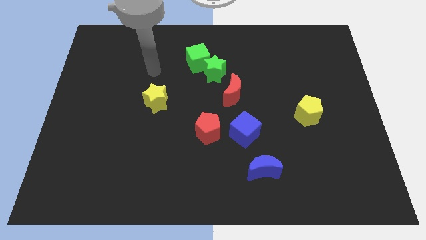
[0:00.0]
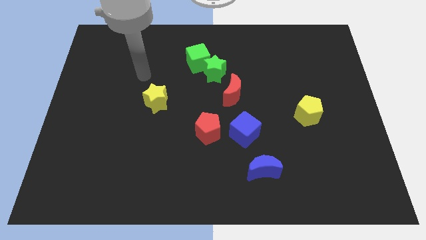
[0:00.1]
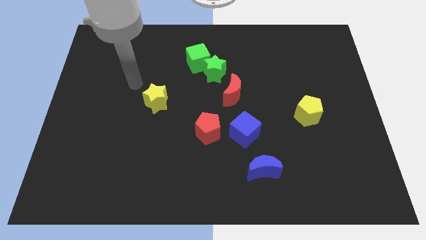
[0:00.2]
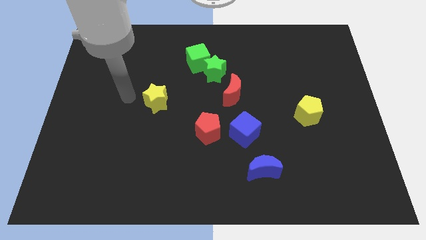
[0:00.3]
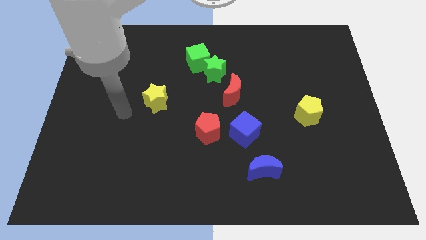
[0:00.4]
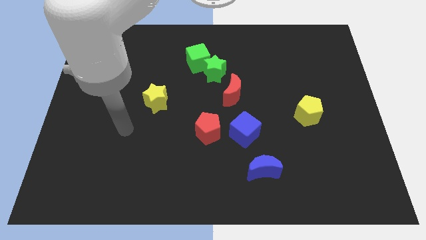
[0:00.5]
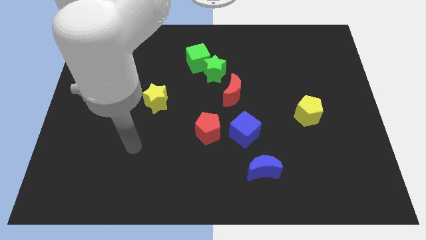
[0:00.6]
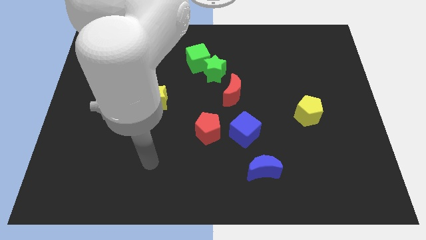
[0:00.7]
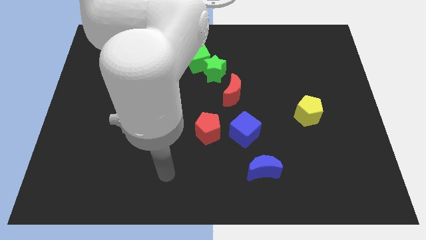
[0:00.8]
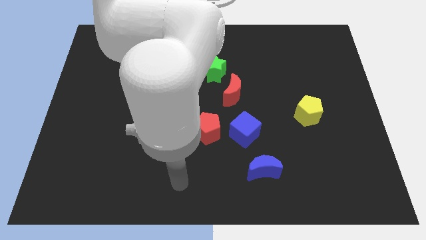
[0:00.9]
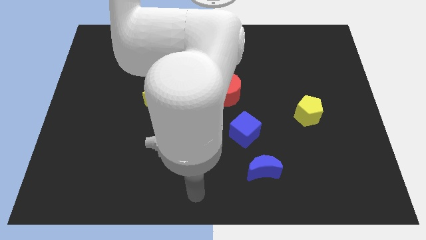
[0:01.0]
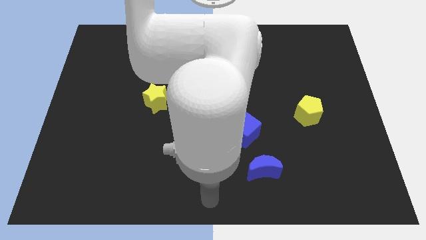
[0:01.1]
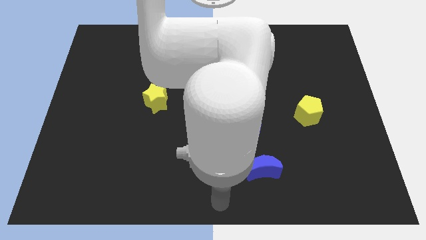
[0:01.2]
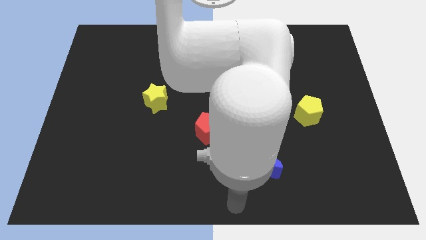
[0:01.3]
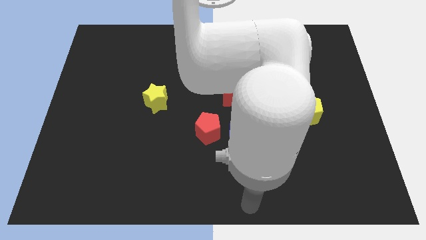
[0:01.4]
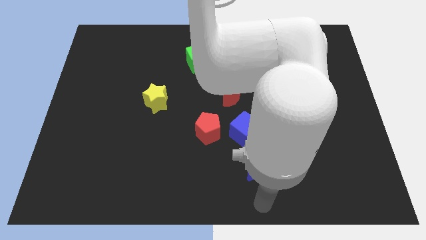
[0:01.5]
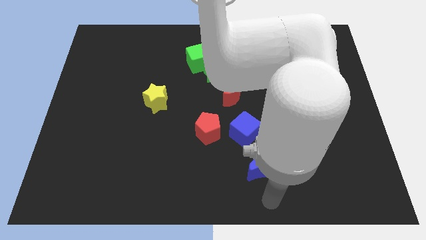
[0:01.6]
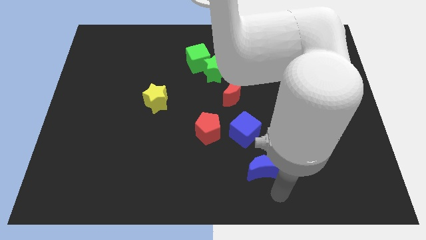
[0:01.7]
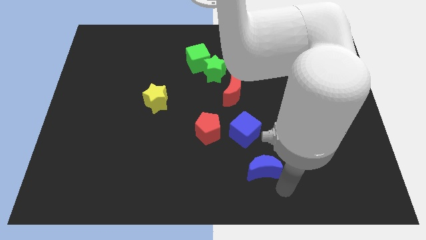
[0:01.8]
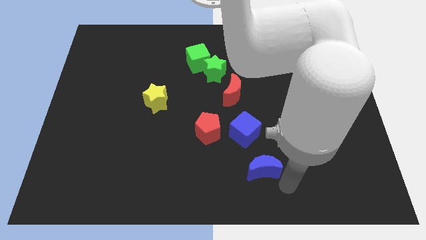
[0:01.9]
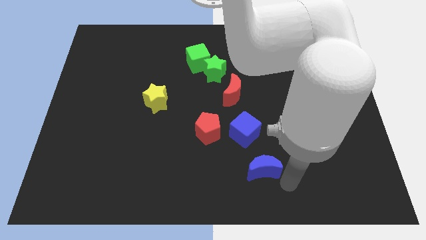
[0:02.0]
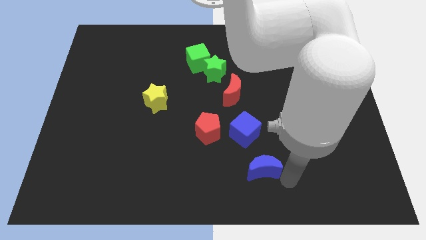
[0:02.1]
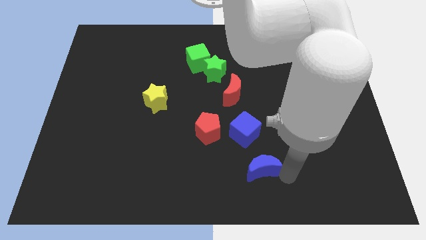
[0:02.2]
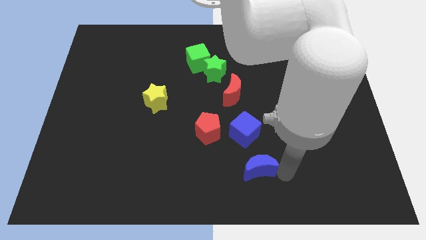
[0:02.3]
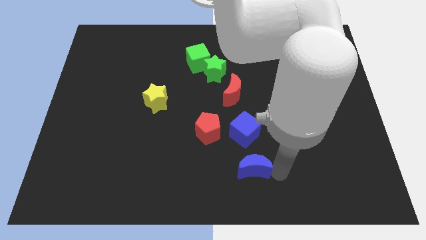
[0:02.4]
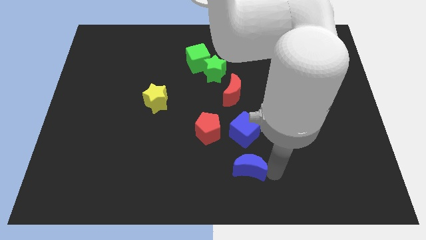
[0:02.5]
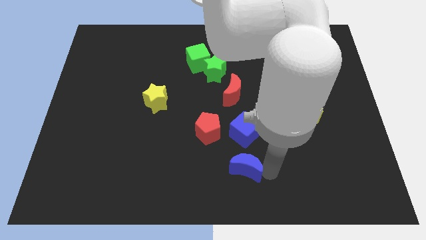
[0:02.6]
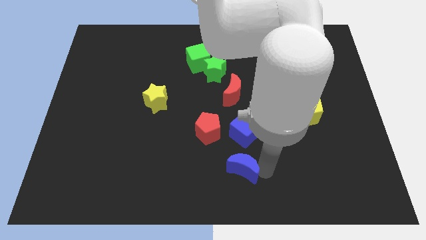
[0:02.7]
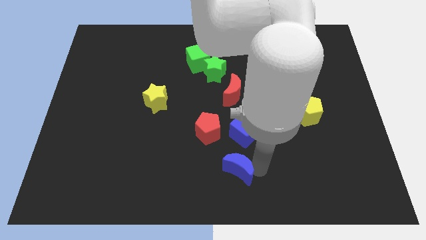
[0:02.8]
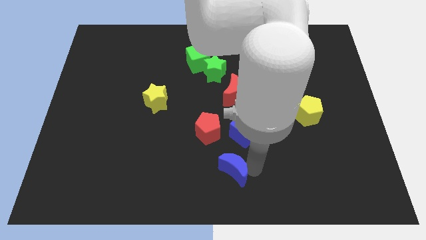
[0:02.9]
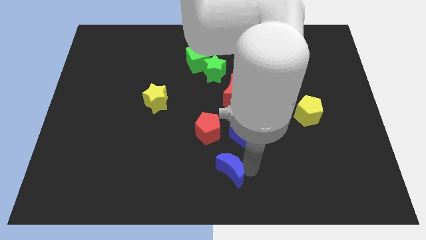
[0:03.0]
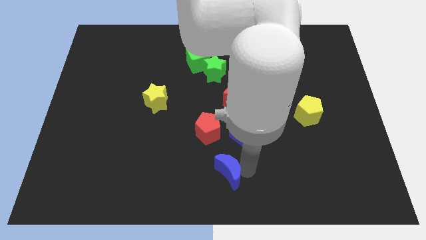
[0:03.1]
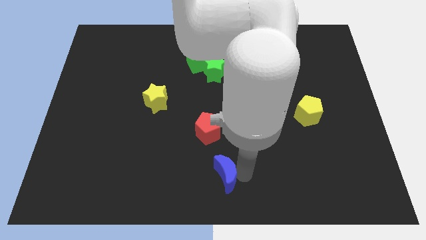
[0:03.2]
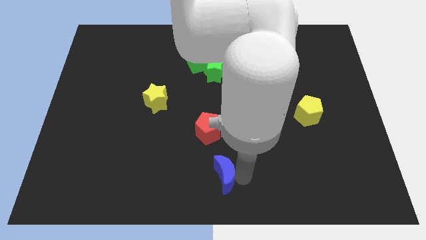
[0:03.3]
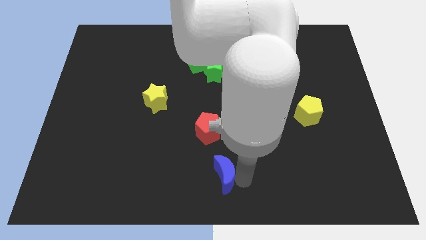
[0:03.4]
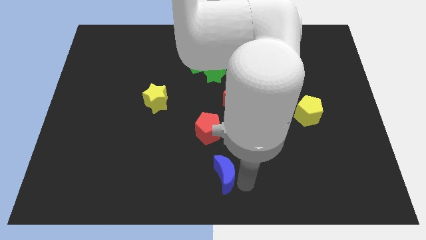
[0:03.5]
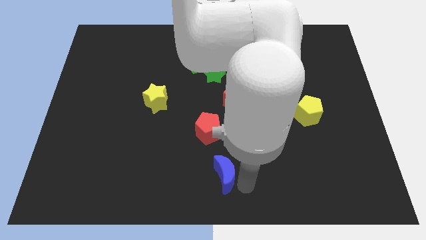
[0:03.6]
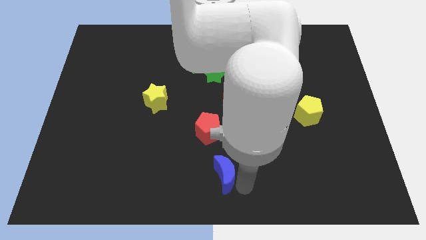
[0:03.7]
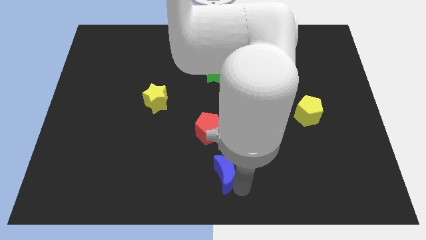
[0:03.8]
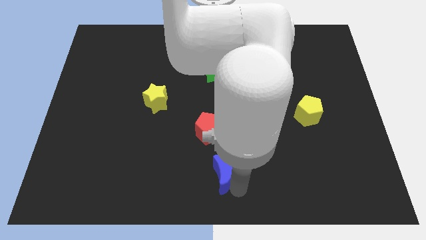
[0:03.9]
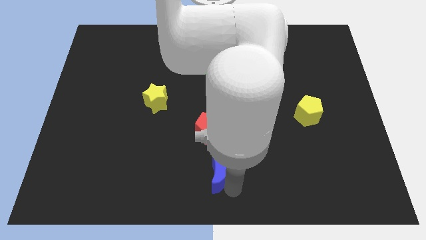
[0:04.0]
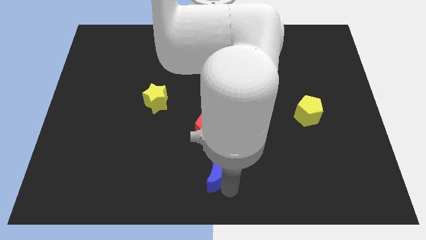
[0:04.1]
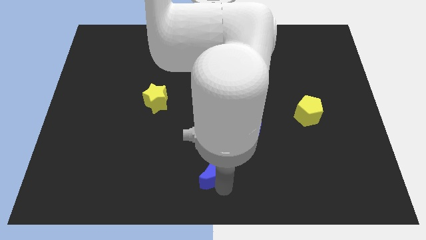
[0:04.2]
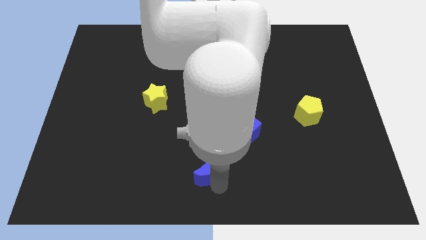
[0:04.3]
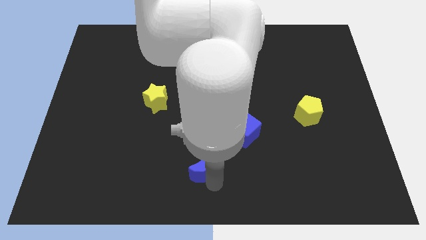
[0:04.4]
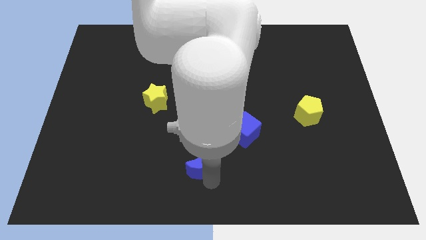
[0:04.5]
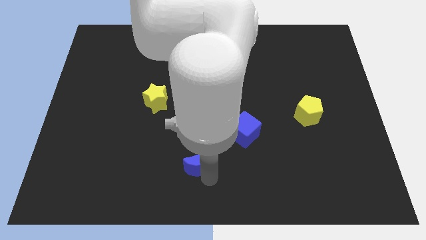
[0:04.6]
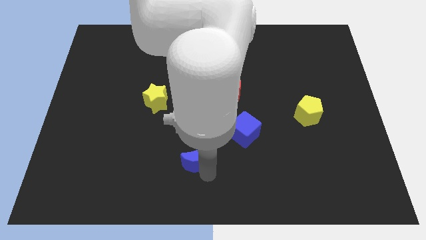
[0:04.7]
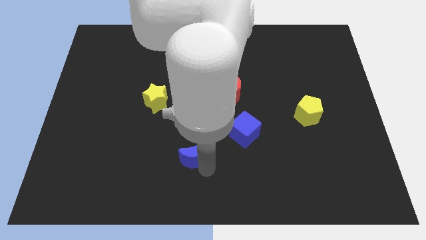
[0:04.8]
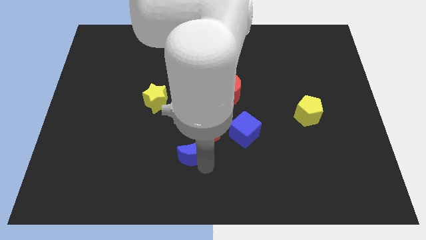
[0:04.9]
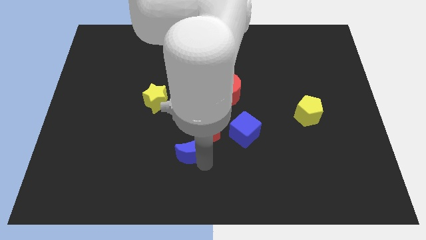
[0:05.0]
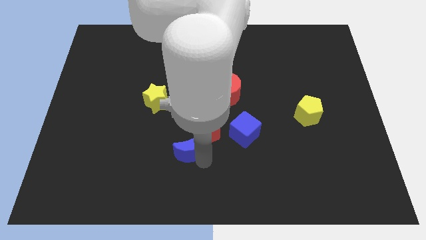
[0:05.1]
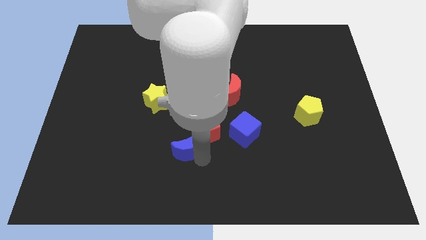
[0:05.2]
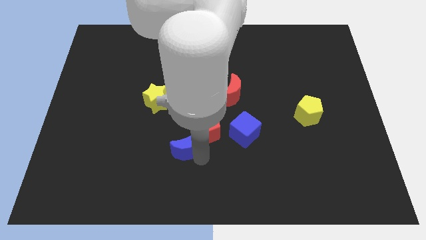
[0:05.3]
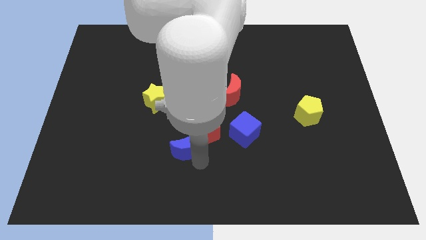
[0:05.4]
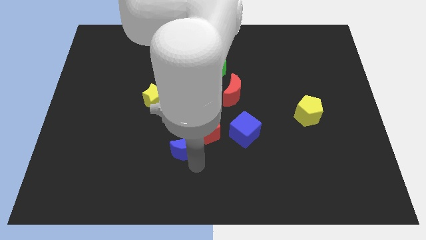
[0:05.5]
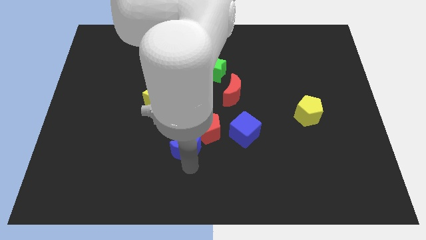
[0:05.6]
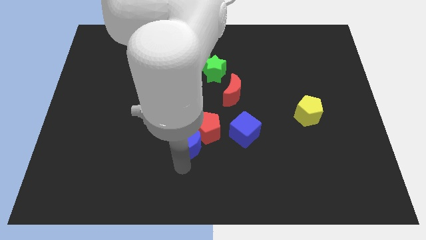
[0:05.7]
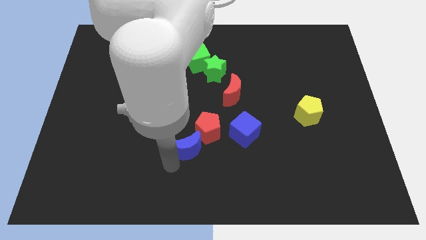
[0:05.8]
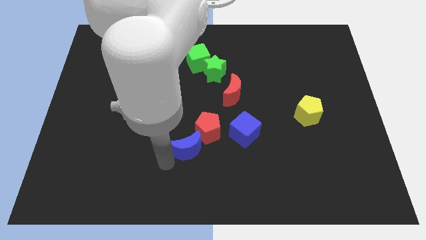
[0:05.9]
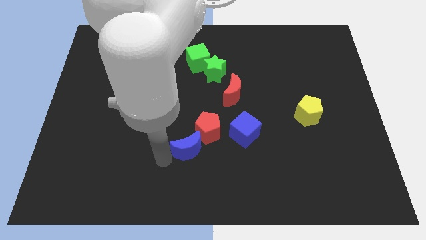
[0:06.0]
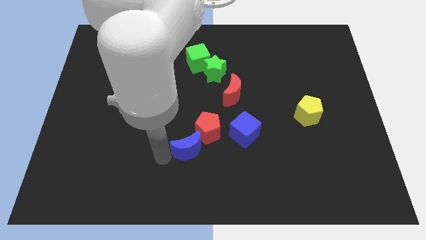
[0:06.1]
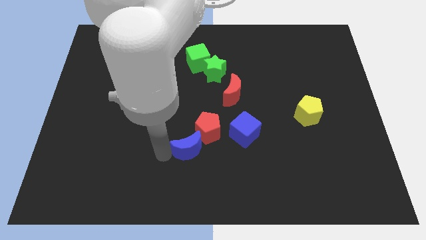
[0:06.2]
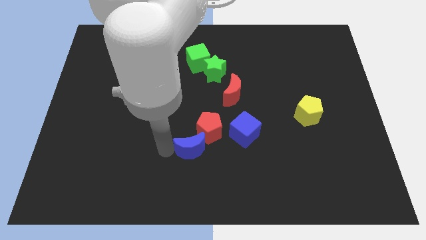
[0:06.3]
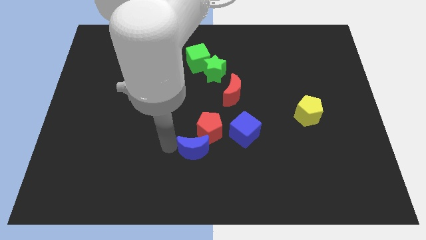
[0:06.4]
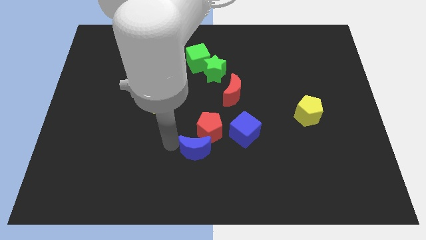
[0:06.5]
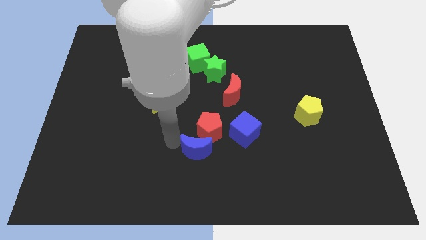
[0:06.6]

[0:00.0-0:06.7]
move the blue moon close to the red pentagon

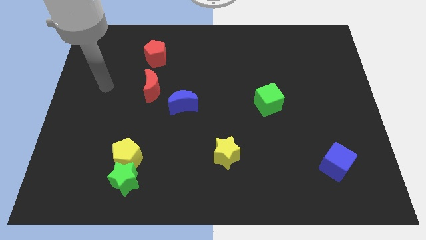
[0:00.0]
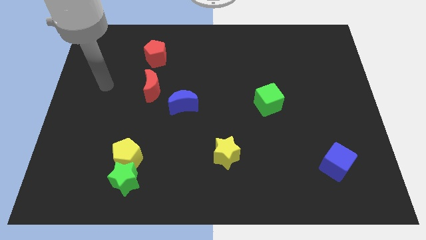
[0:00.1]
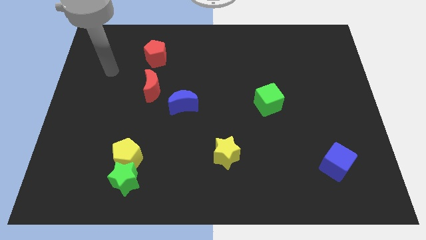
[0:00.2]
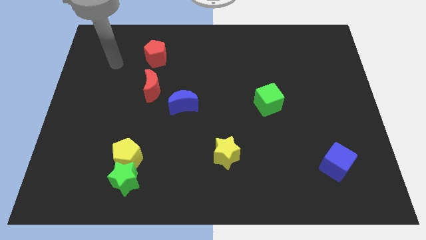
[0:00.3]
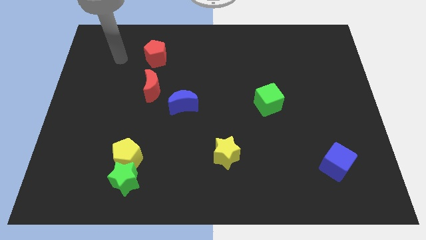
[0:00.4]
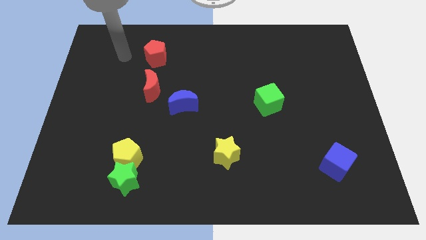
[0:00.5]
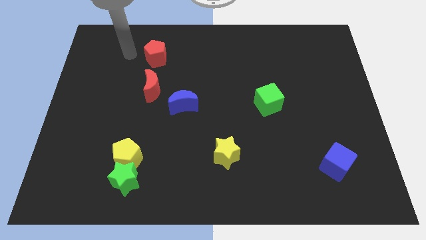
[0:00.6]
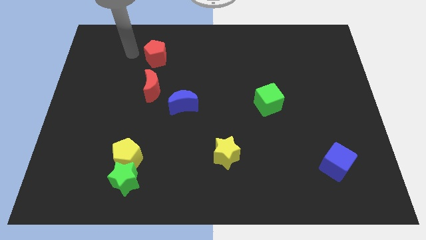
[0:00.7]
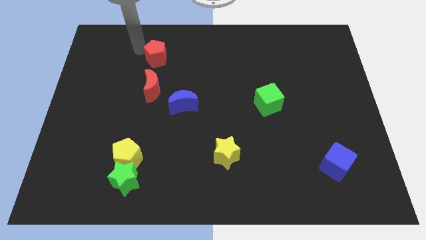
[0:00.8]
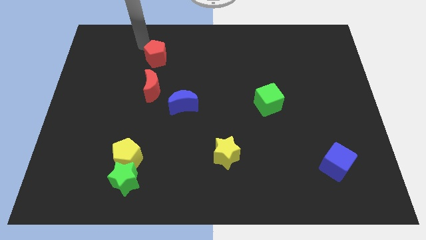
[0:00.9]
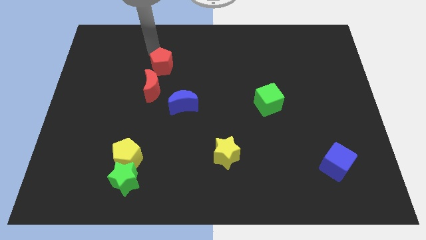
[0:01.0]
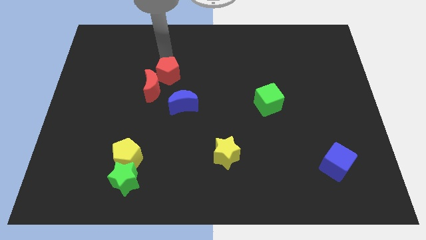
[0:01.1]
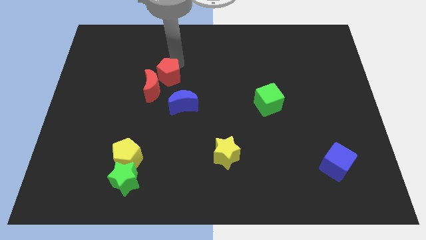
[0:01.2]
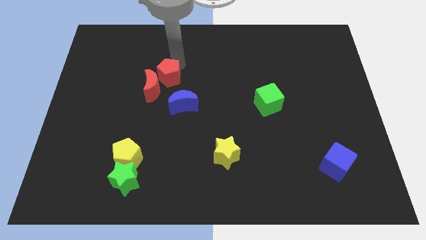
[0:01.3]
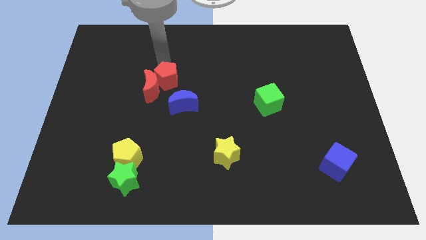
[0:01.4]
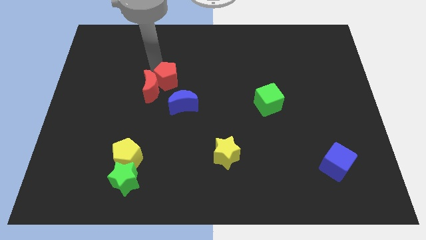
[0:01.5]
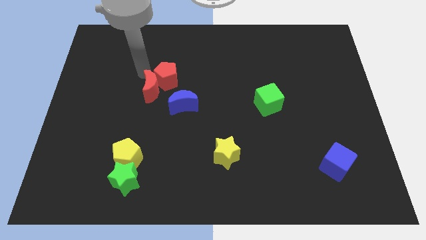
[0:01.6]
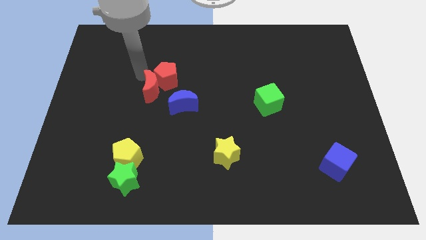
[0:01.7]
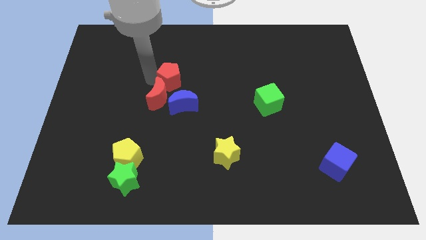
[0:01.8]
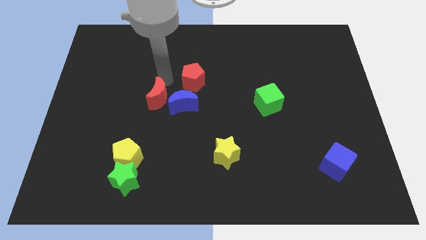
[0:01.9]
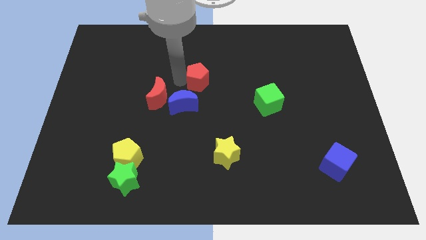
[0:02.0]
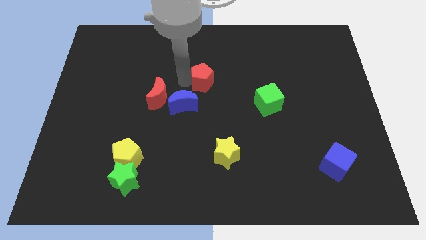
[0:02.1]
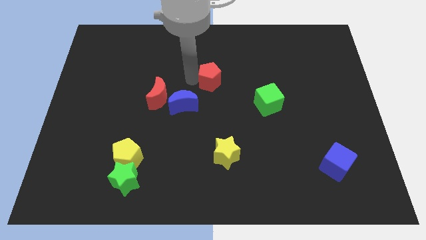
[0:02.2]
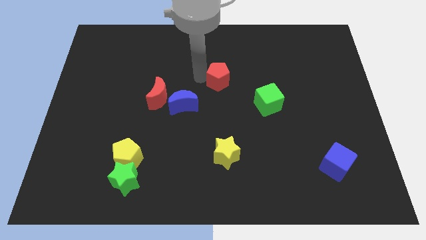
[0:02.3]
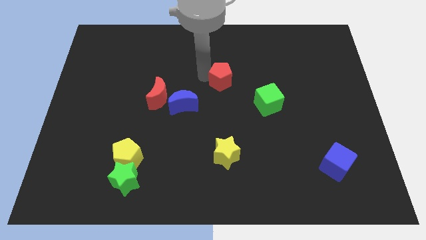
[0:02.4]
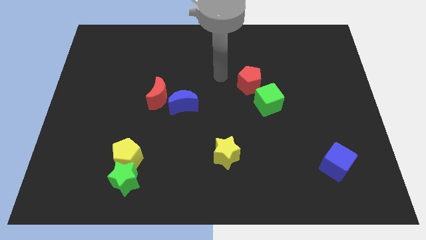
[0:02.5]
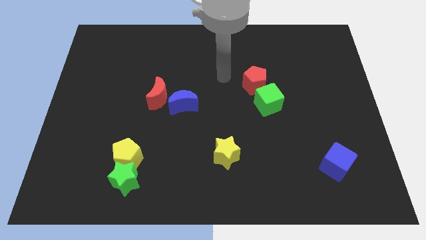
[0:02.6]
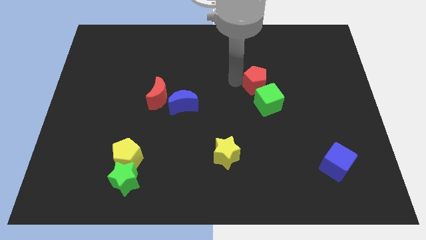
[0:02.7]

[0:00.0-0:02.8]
slide the red pentagon next to the green cube
